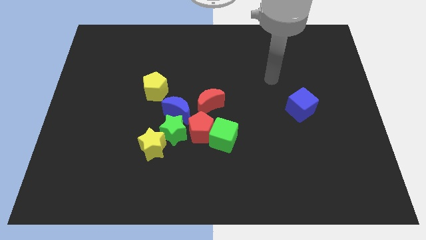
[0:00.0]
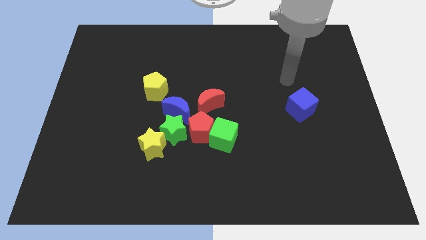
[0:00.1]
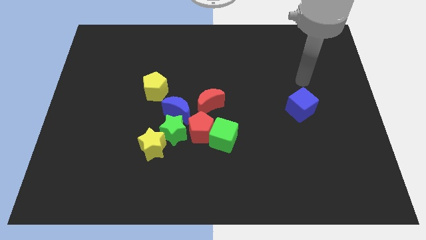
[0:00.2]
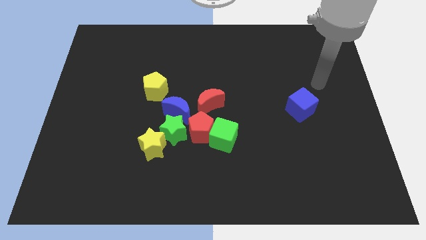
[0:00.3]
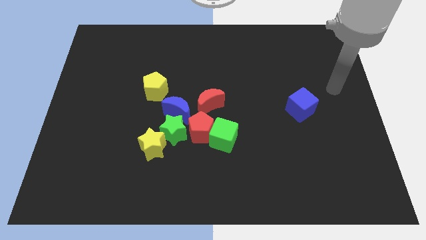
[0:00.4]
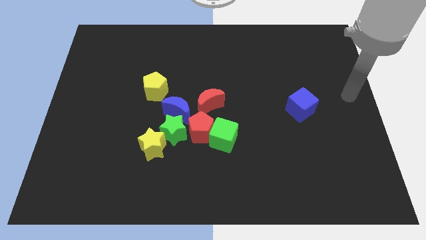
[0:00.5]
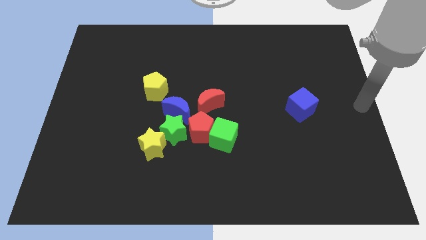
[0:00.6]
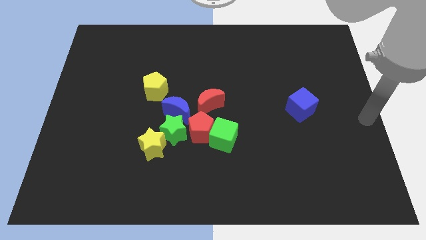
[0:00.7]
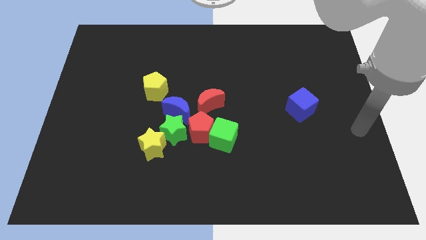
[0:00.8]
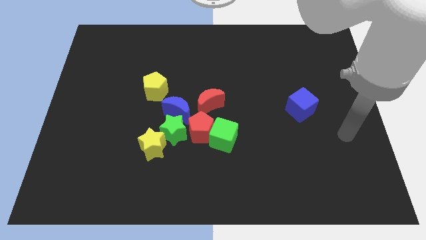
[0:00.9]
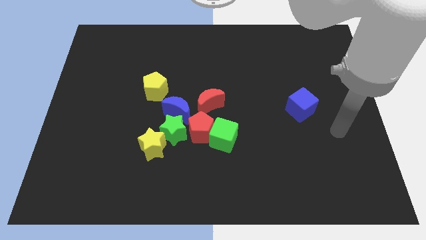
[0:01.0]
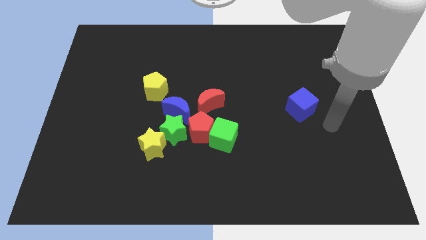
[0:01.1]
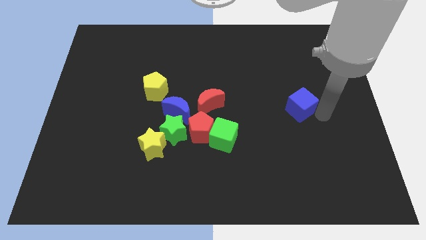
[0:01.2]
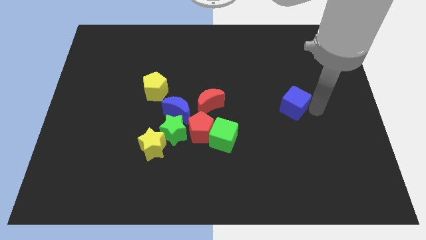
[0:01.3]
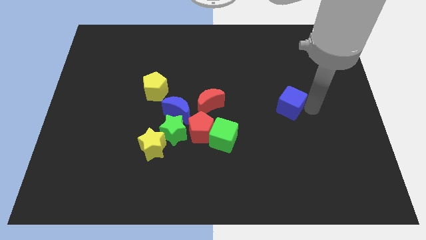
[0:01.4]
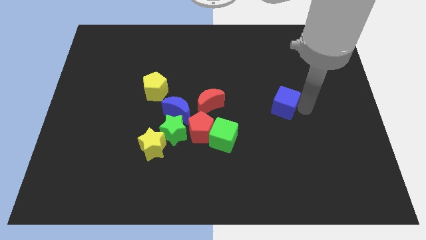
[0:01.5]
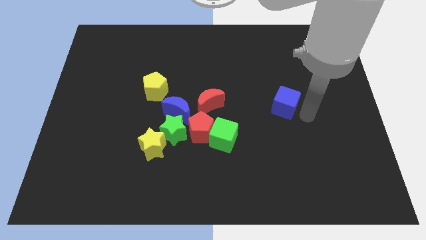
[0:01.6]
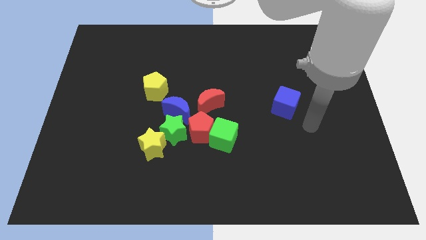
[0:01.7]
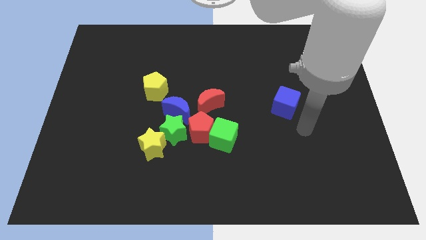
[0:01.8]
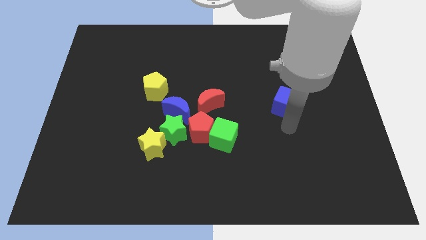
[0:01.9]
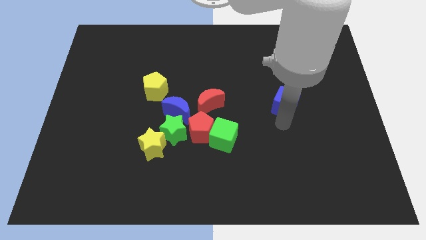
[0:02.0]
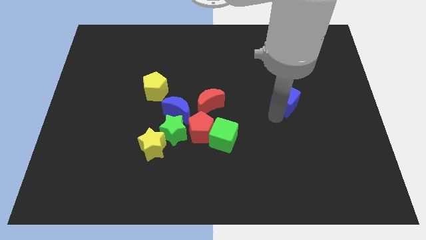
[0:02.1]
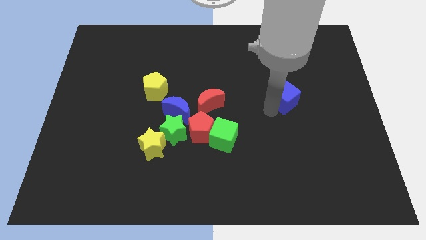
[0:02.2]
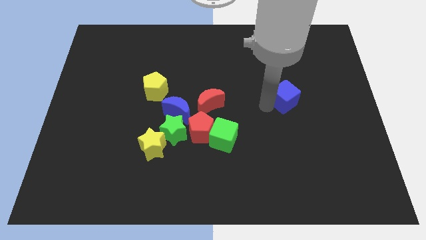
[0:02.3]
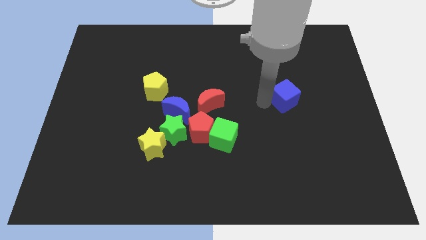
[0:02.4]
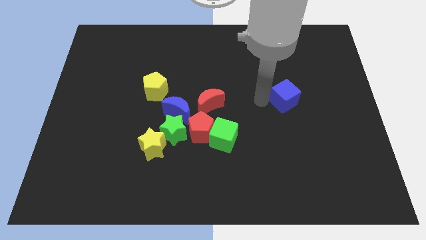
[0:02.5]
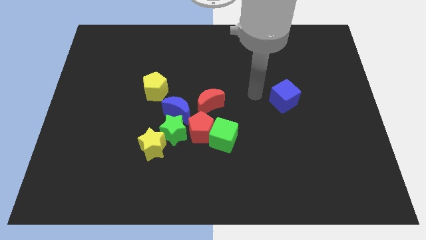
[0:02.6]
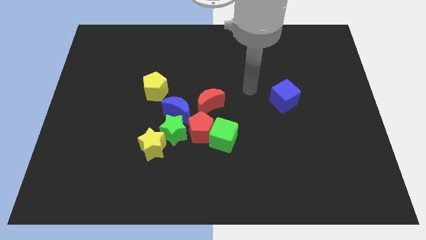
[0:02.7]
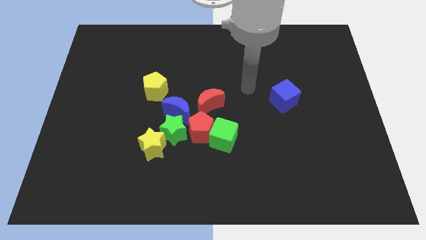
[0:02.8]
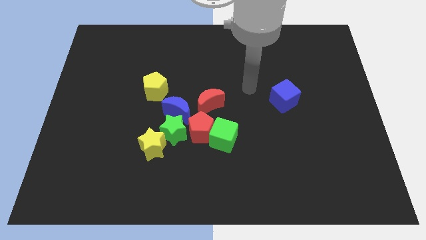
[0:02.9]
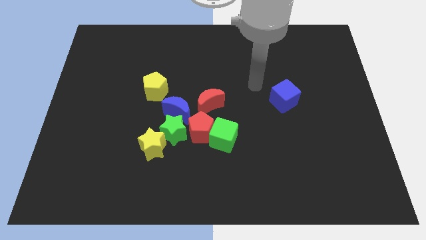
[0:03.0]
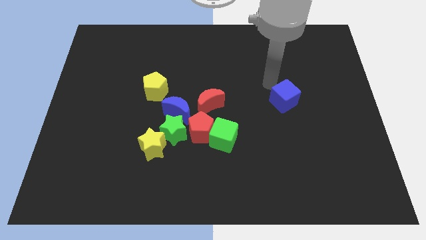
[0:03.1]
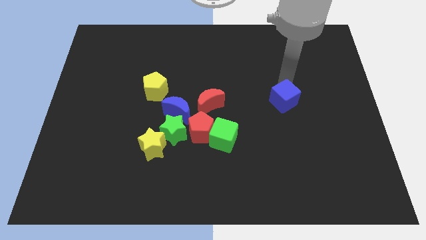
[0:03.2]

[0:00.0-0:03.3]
place blue cube to the right side of the red crescent

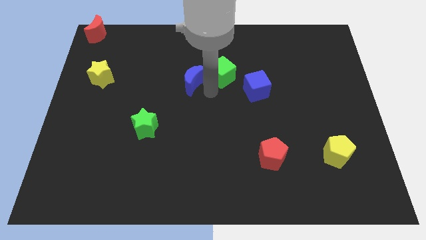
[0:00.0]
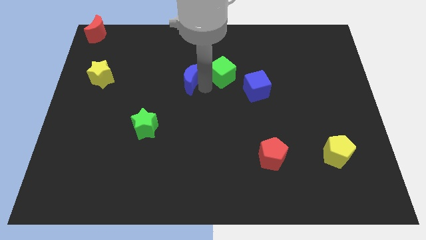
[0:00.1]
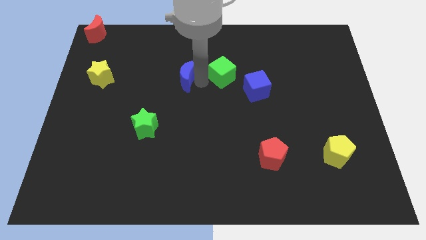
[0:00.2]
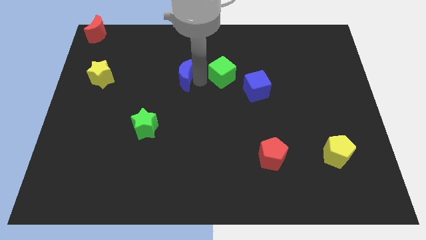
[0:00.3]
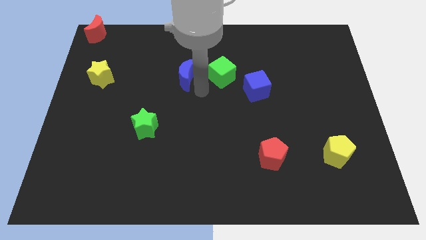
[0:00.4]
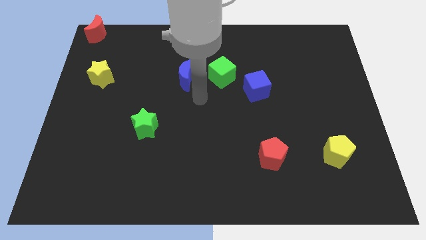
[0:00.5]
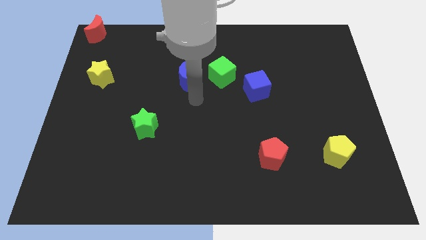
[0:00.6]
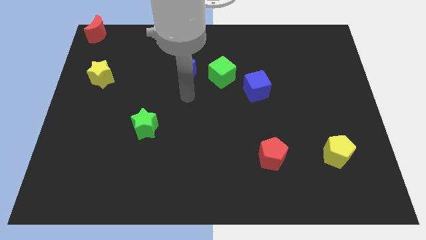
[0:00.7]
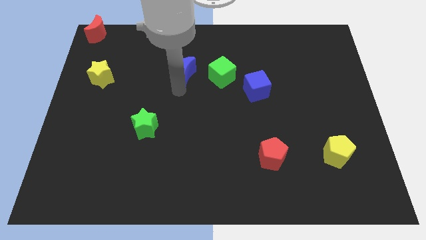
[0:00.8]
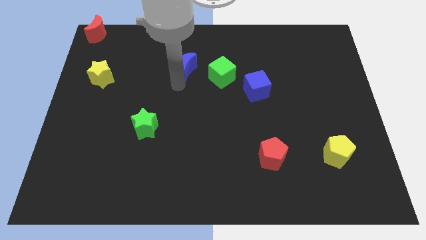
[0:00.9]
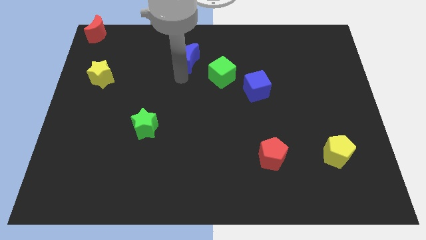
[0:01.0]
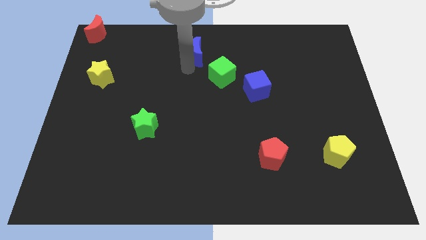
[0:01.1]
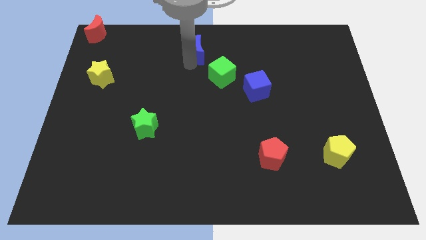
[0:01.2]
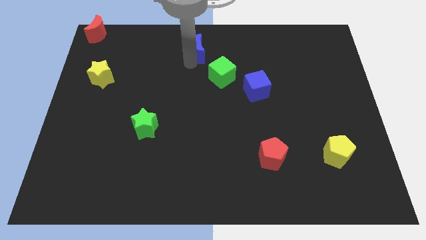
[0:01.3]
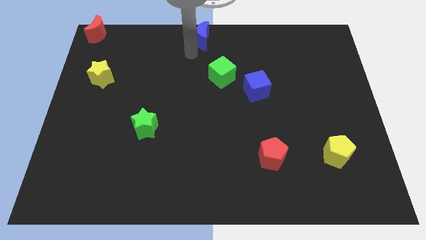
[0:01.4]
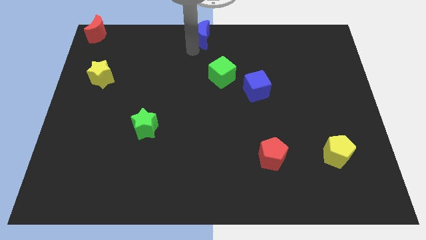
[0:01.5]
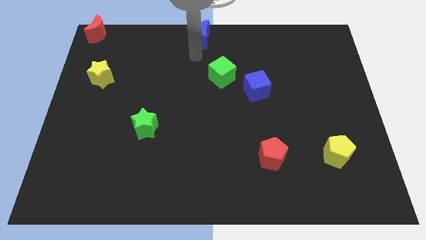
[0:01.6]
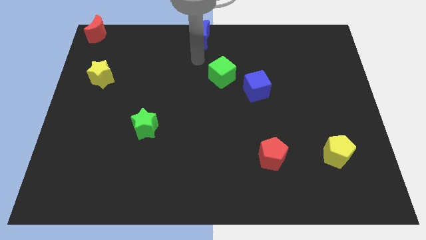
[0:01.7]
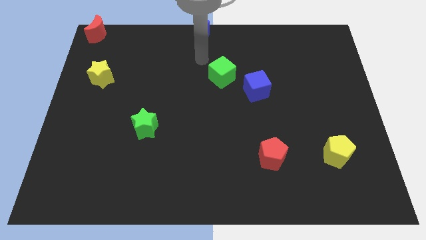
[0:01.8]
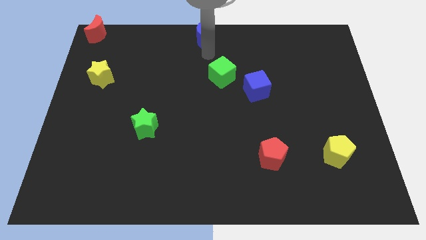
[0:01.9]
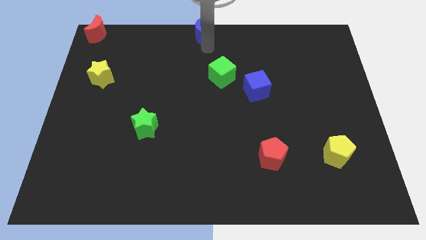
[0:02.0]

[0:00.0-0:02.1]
separate blue moon from green cube

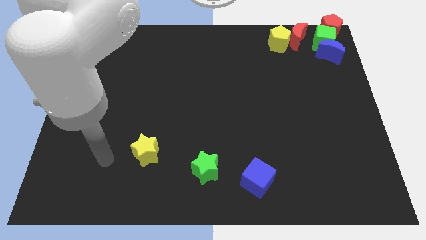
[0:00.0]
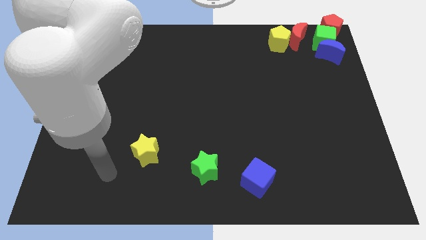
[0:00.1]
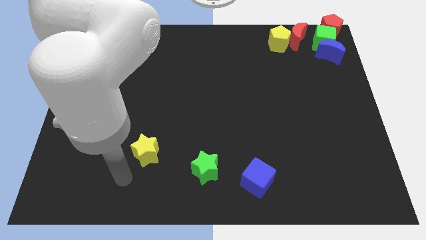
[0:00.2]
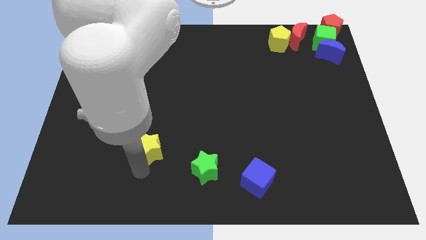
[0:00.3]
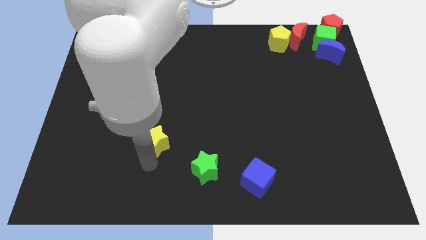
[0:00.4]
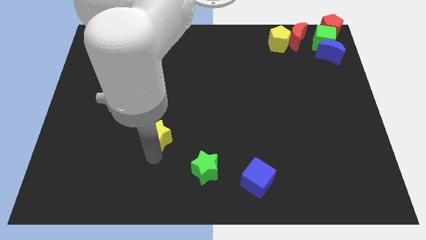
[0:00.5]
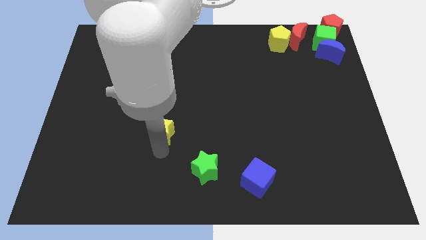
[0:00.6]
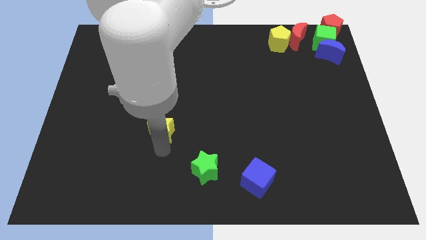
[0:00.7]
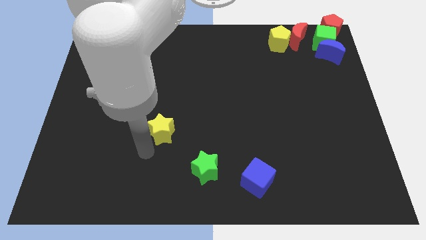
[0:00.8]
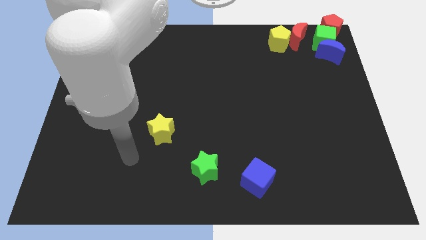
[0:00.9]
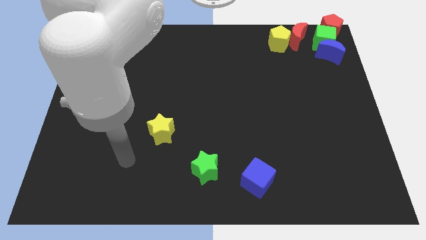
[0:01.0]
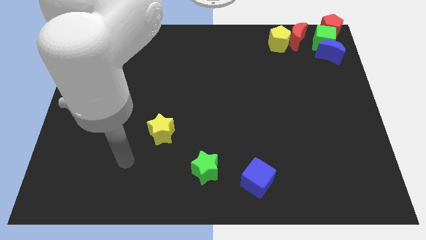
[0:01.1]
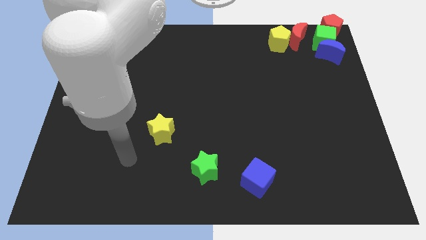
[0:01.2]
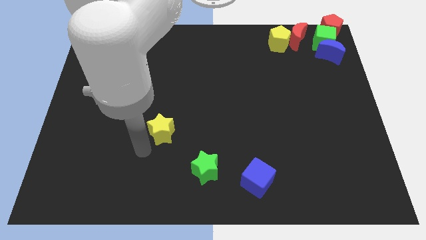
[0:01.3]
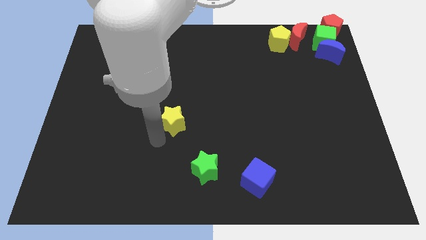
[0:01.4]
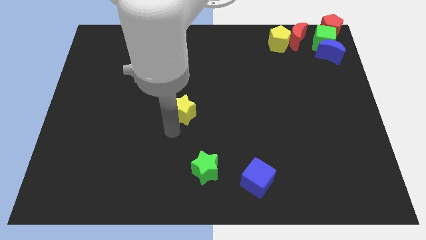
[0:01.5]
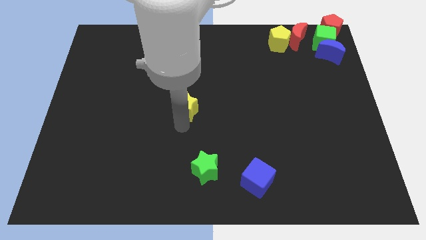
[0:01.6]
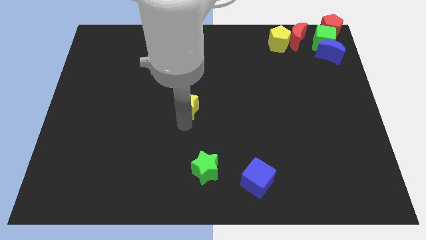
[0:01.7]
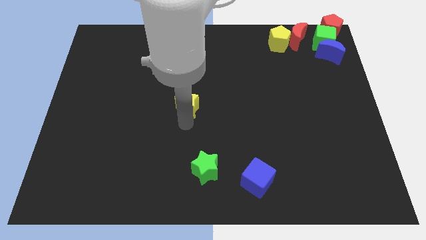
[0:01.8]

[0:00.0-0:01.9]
push the yellow star upwards

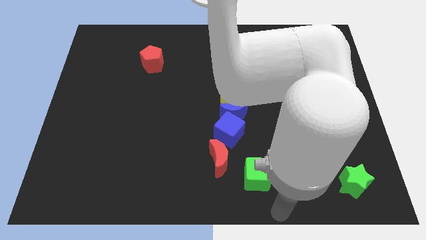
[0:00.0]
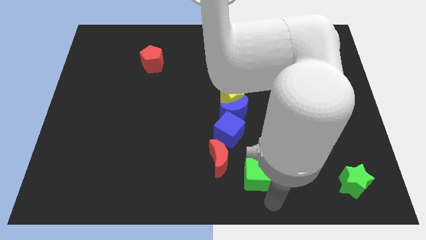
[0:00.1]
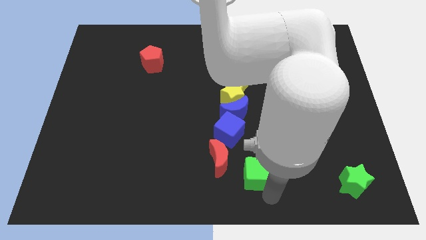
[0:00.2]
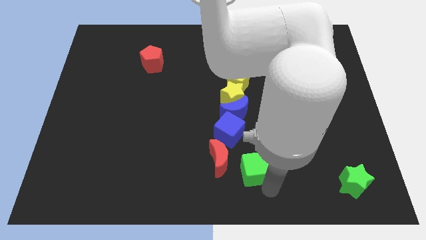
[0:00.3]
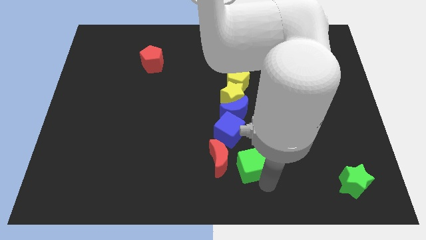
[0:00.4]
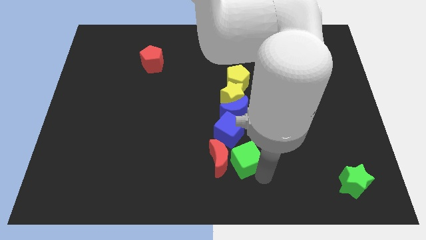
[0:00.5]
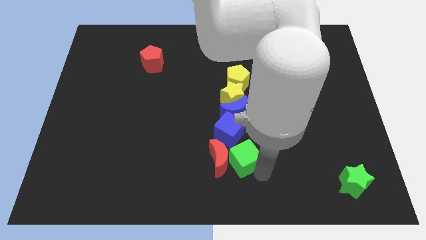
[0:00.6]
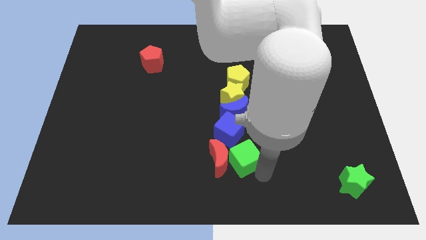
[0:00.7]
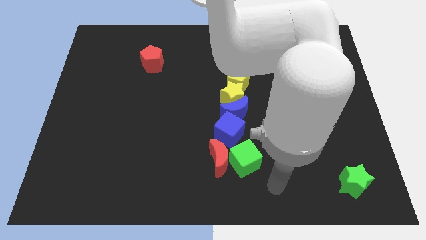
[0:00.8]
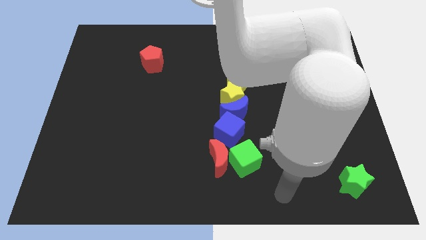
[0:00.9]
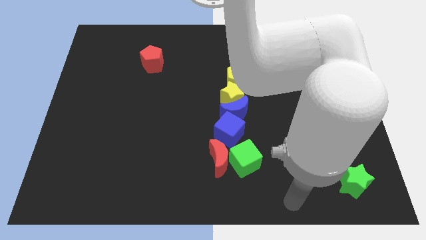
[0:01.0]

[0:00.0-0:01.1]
move green cube towards blue cube

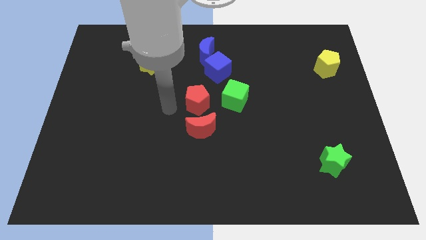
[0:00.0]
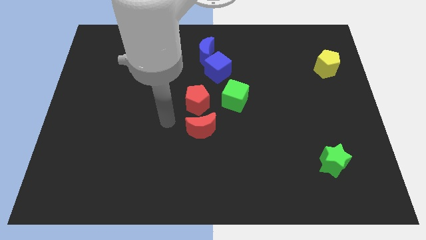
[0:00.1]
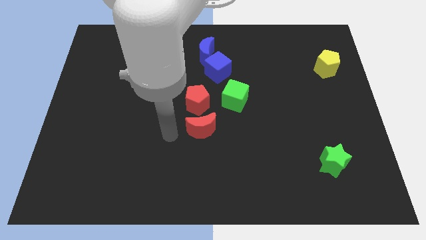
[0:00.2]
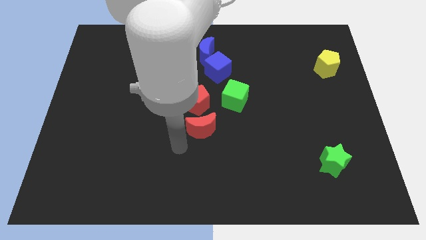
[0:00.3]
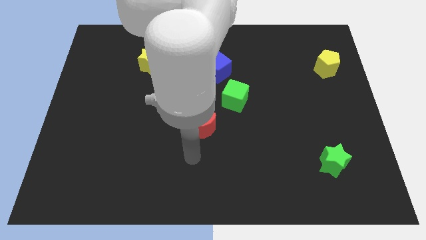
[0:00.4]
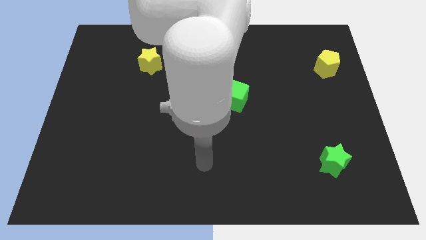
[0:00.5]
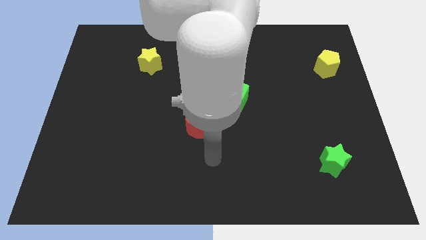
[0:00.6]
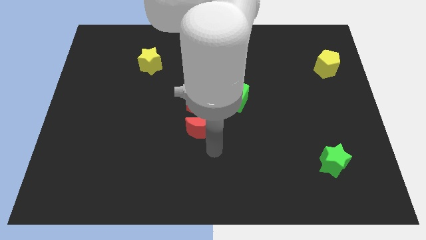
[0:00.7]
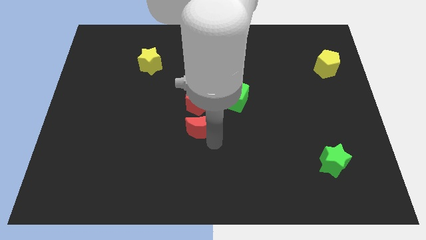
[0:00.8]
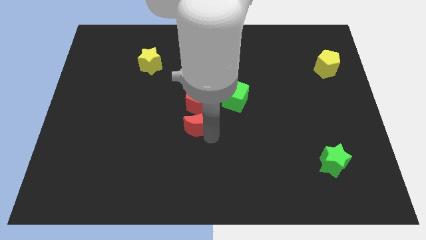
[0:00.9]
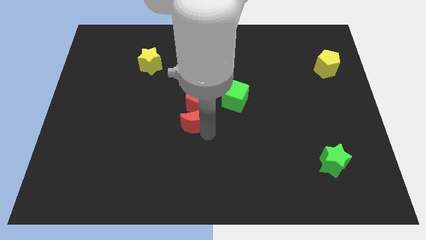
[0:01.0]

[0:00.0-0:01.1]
push red moon into red pentagon
